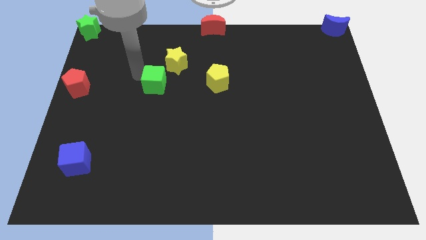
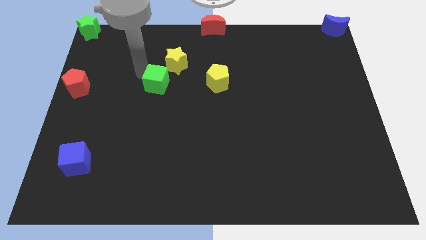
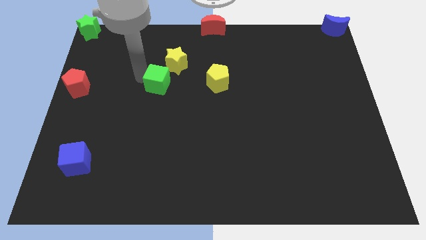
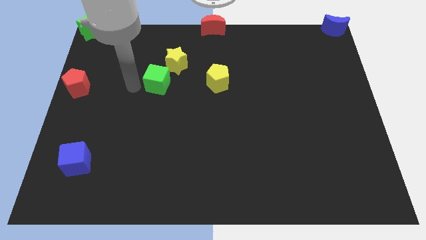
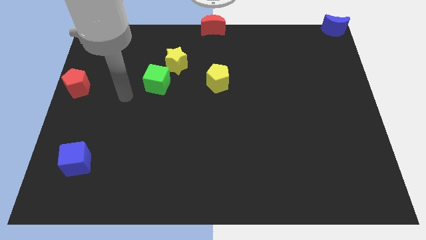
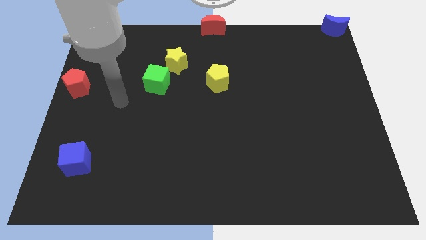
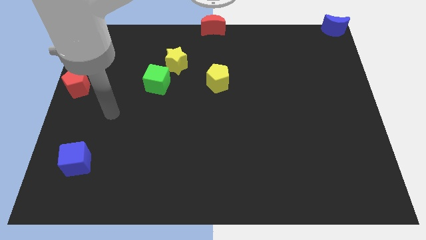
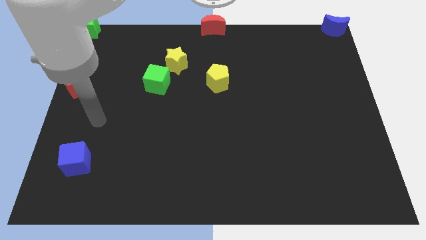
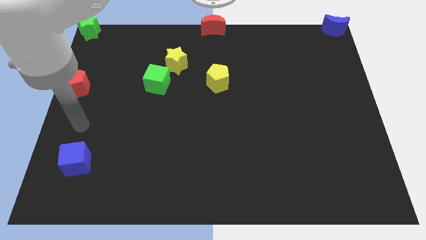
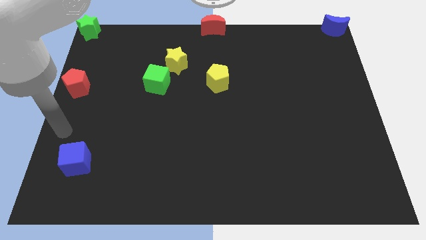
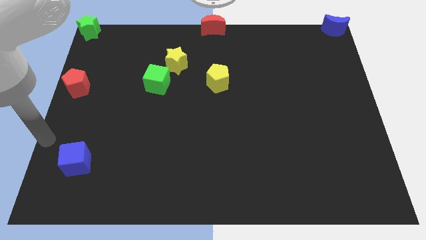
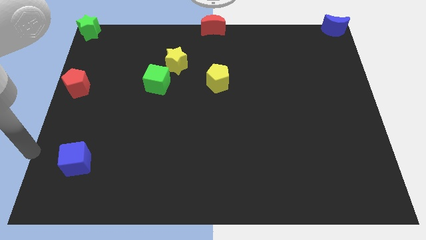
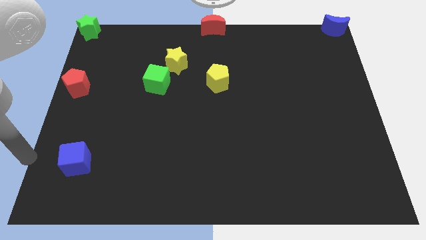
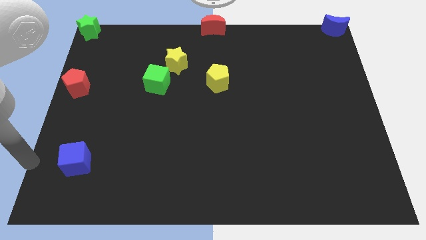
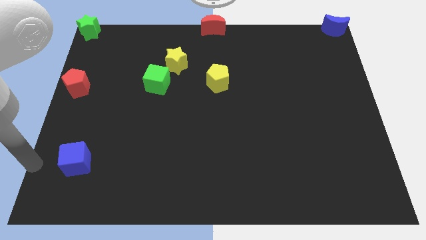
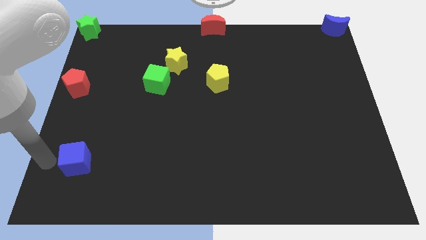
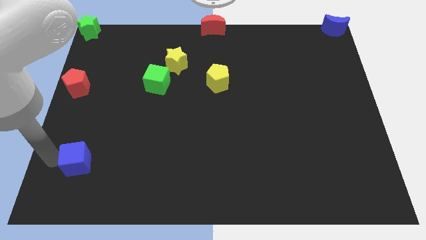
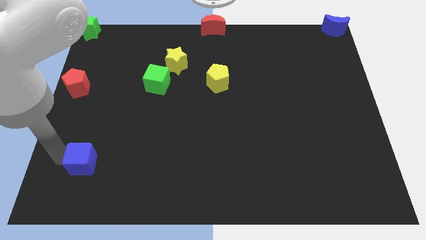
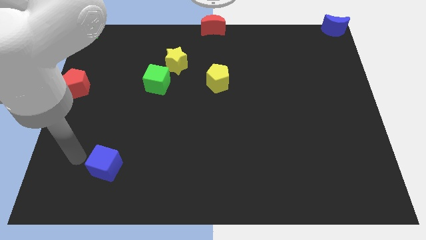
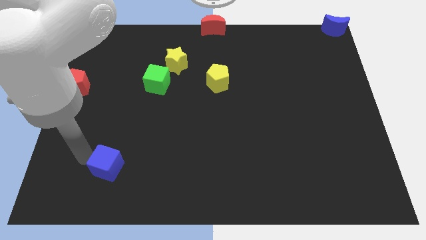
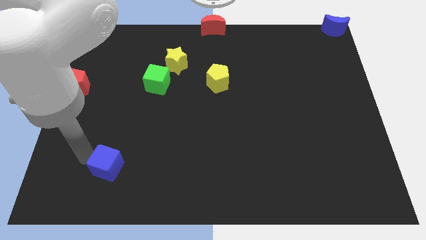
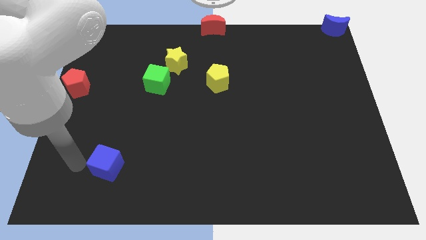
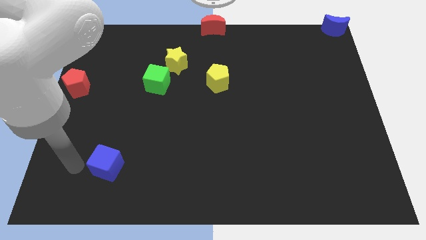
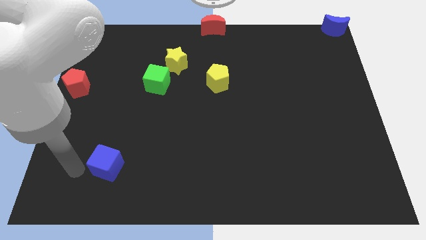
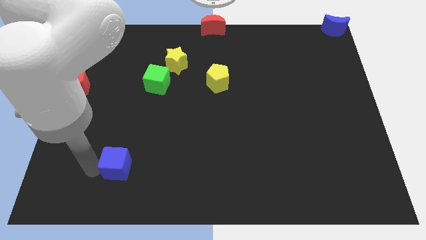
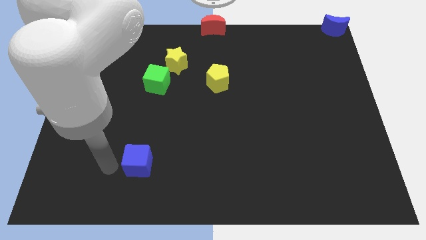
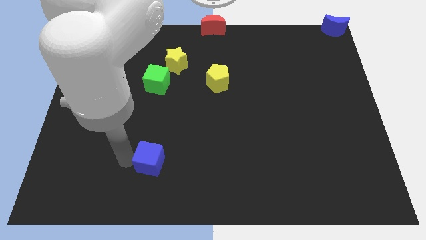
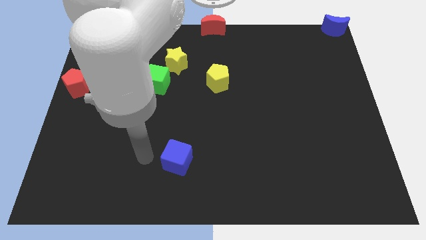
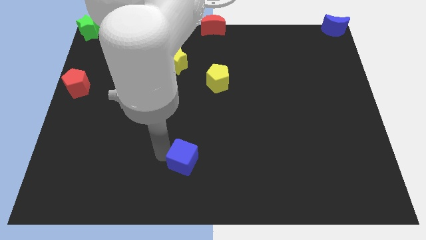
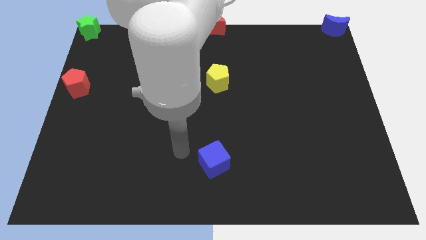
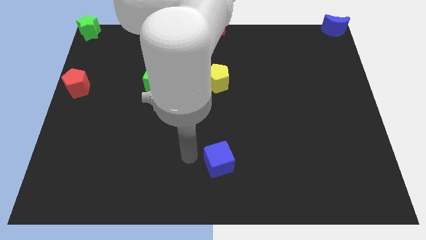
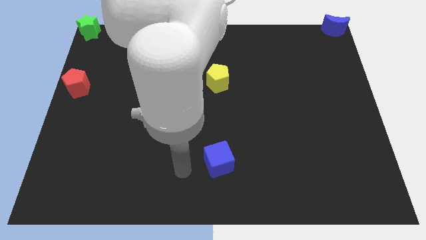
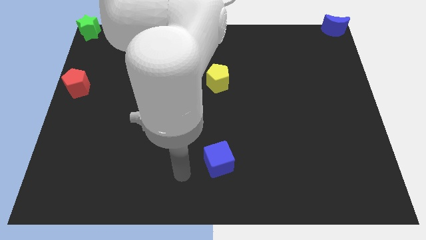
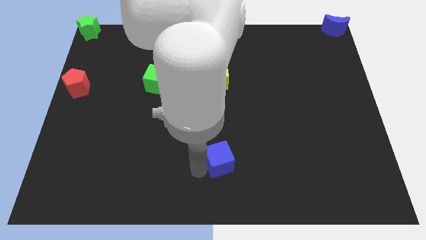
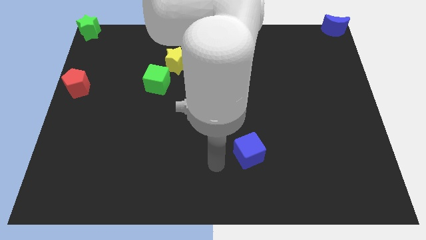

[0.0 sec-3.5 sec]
place the blue cube vertically below the yellow pentagon

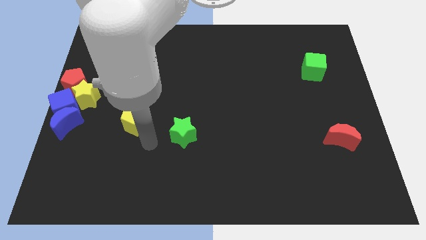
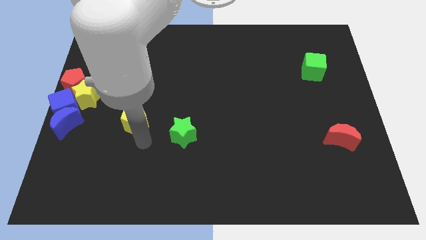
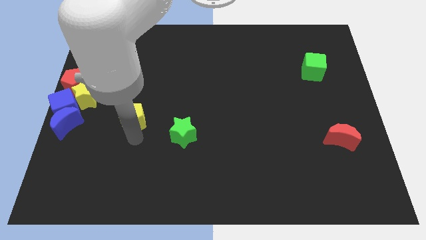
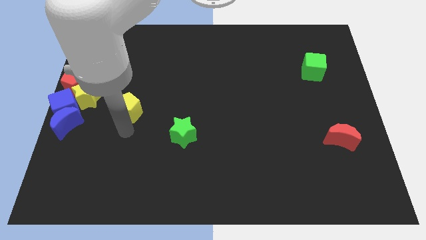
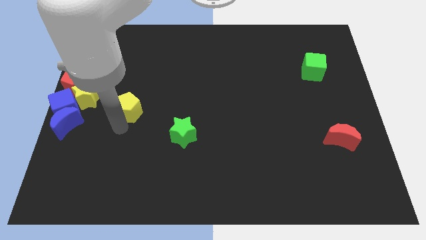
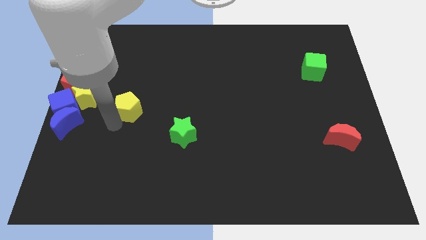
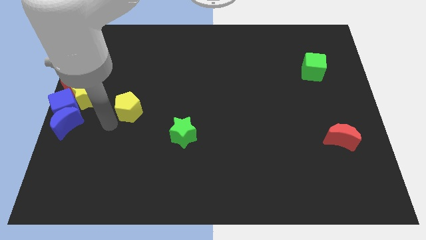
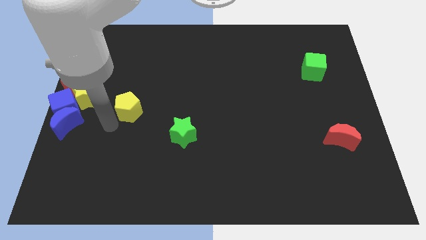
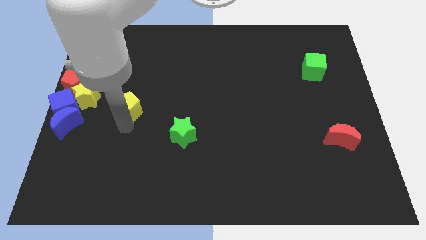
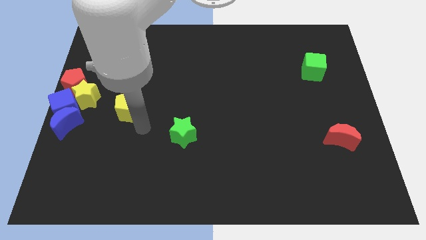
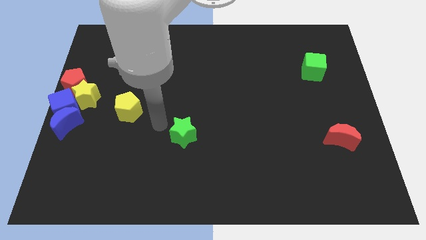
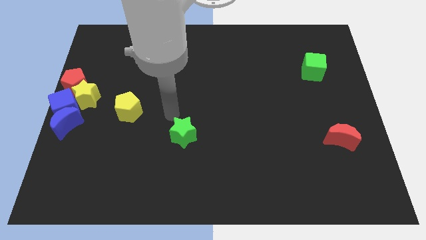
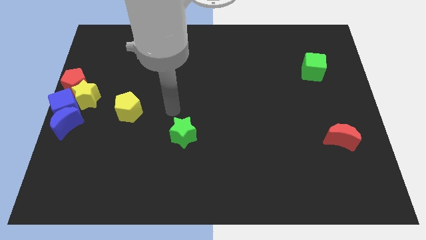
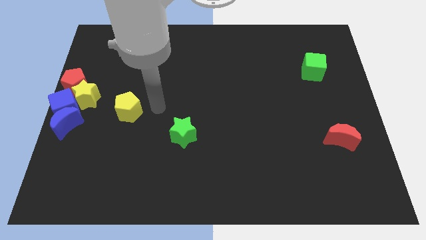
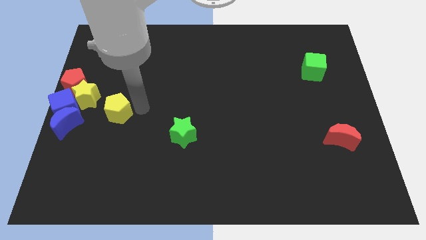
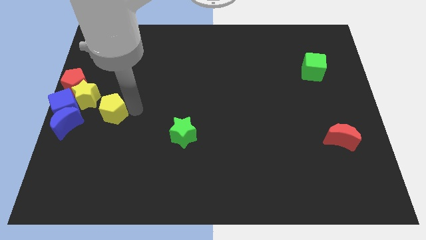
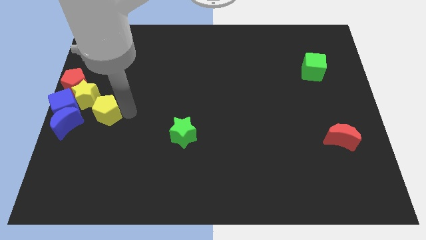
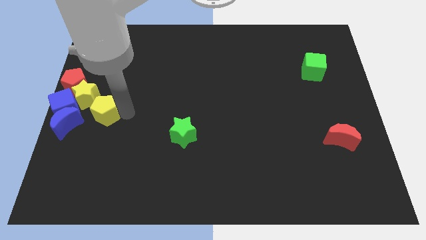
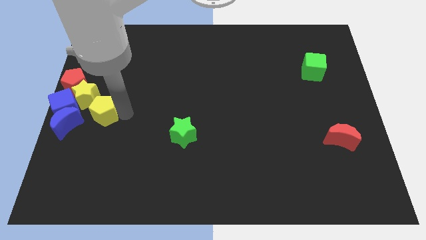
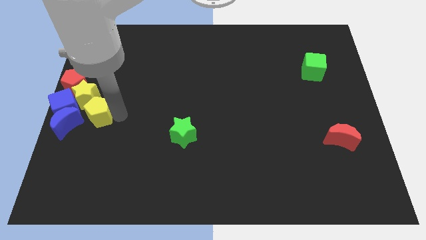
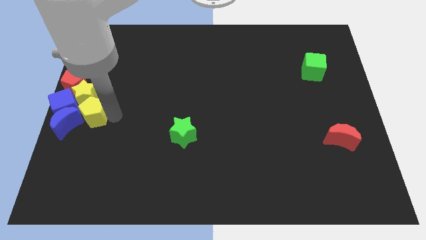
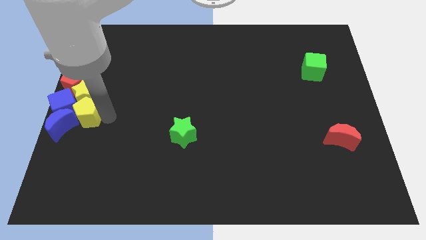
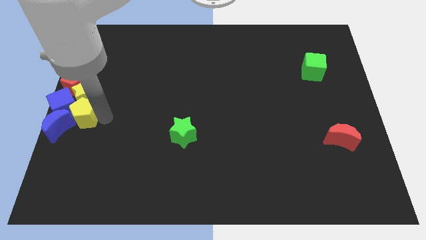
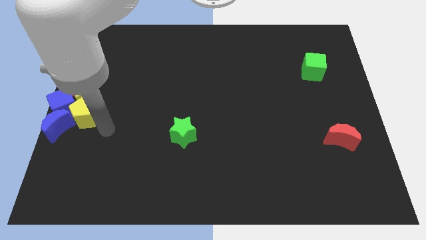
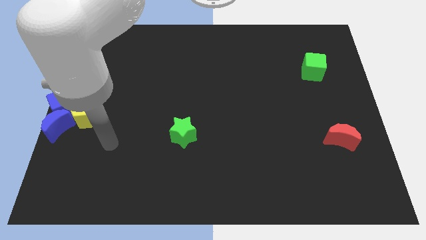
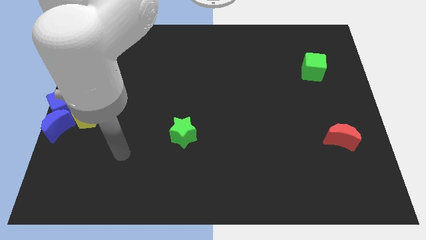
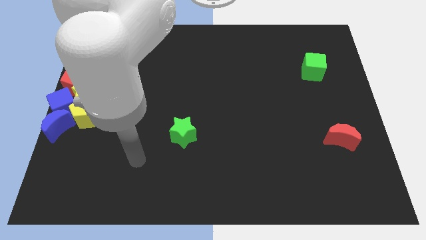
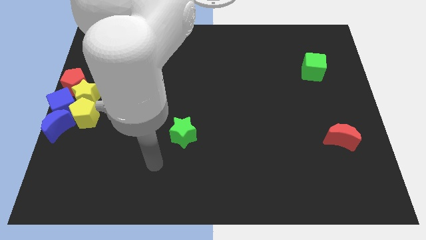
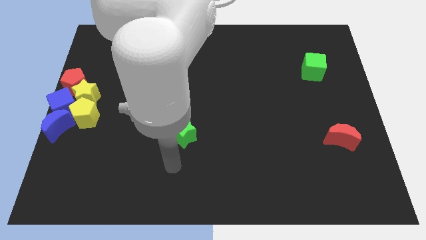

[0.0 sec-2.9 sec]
push the yellow pentagon below the yellow star

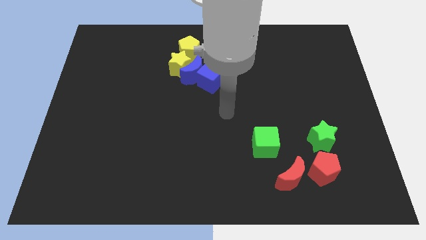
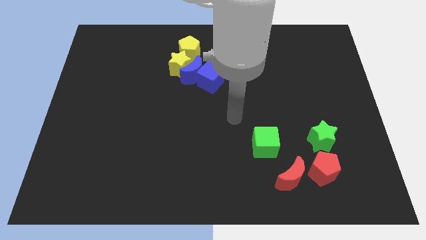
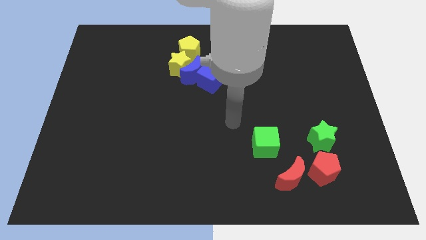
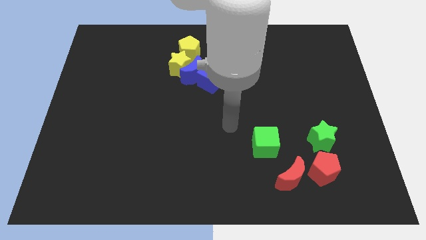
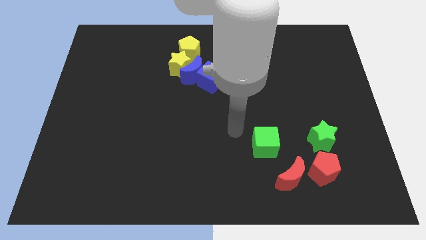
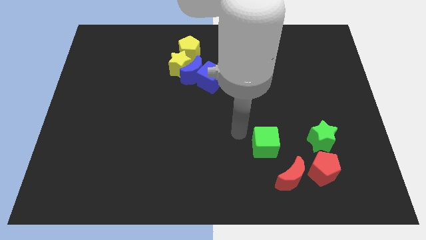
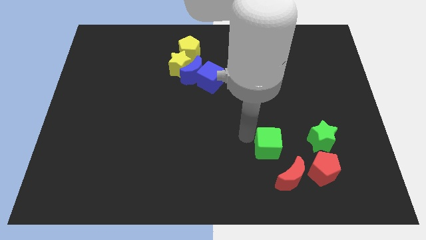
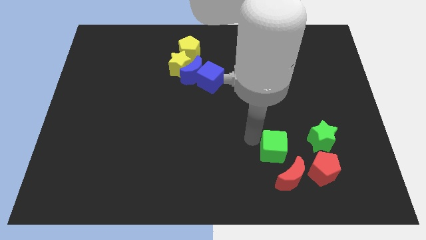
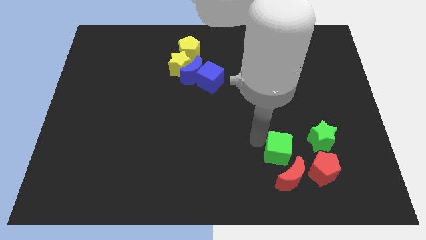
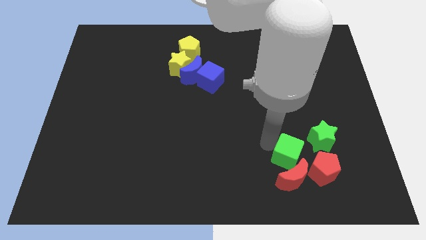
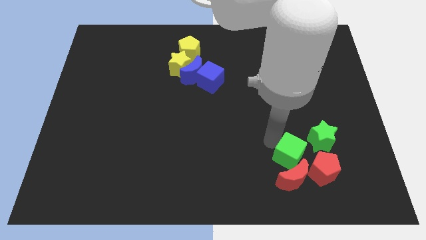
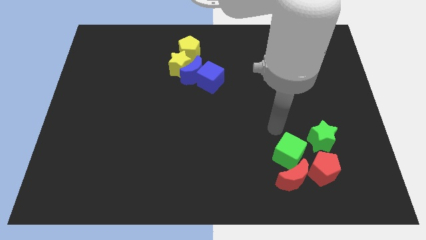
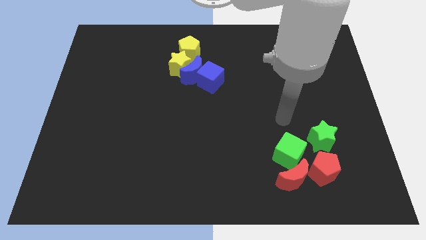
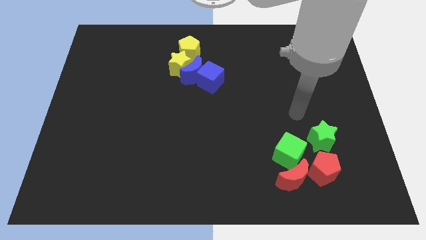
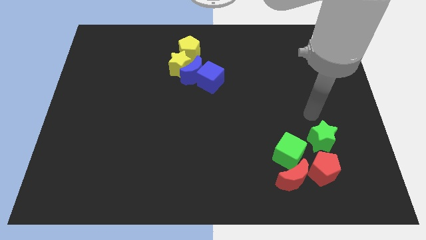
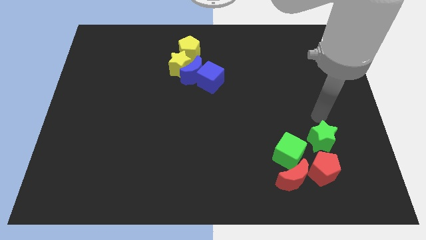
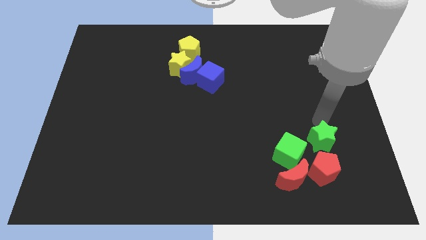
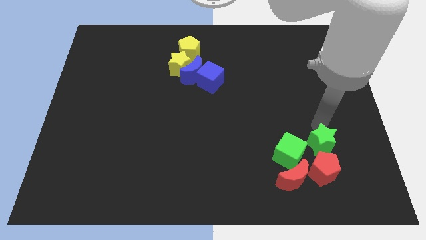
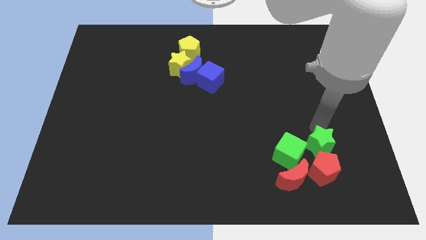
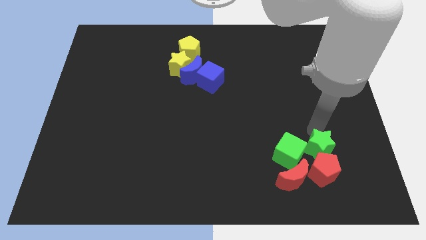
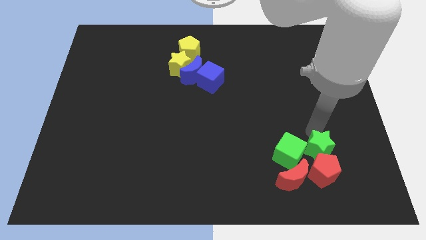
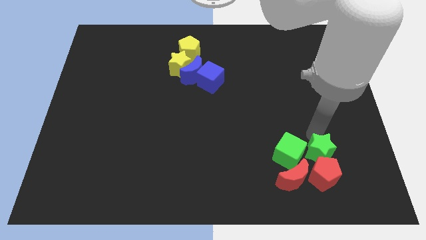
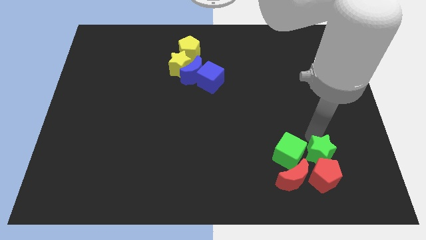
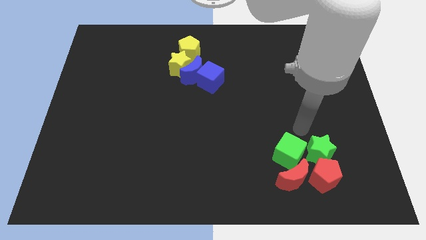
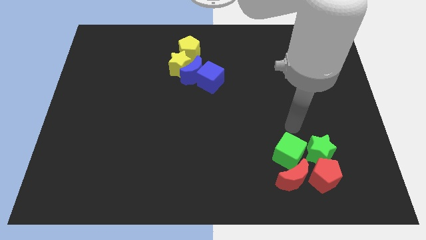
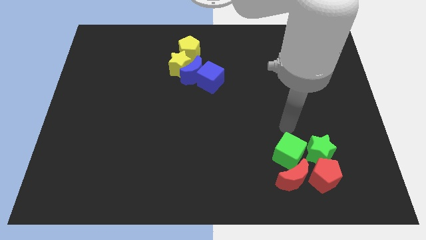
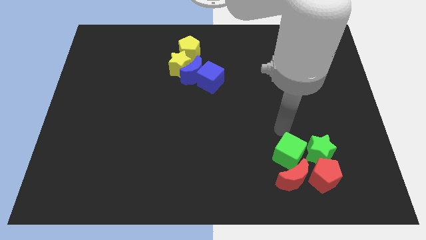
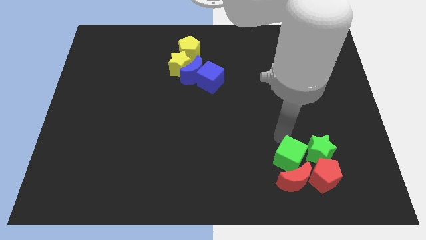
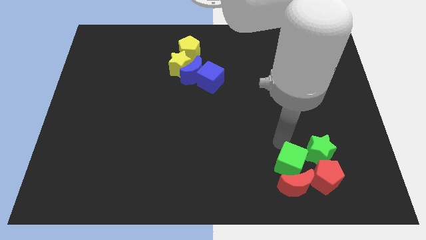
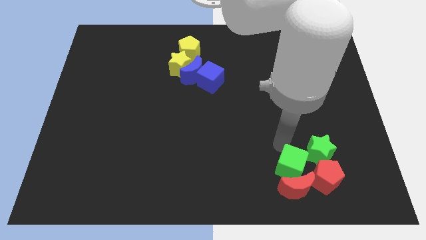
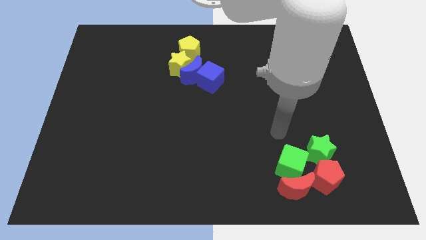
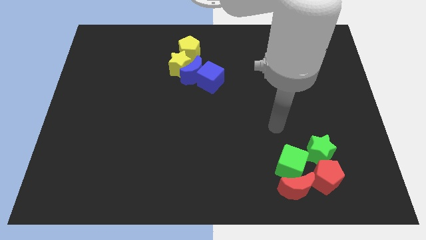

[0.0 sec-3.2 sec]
move the green blocks into the red blocks
